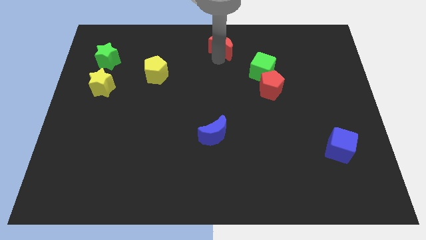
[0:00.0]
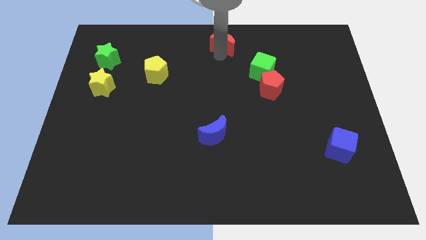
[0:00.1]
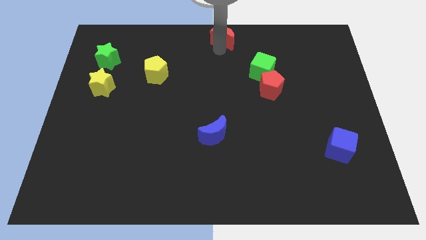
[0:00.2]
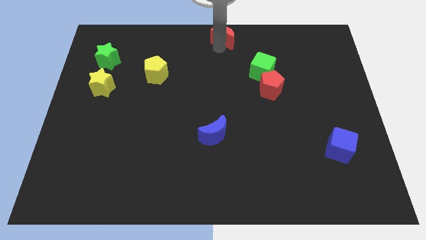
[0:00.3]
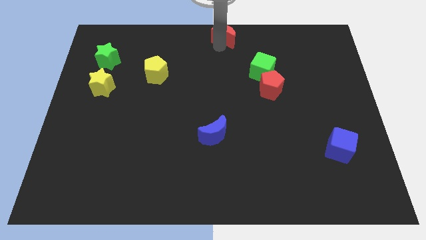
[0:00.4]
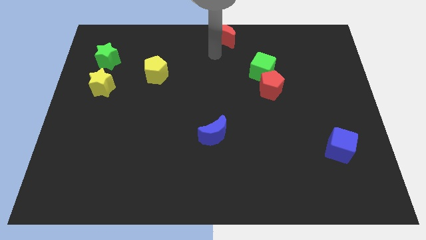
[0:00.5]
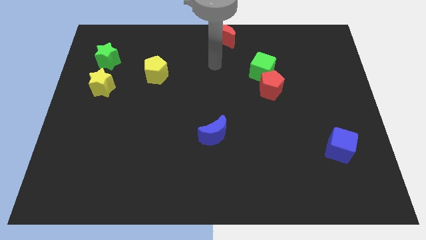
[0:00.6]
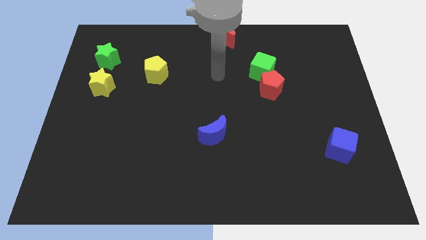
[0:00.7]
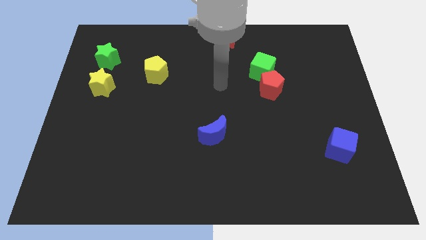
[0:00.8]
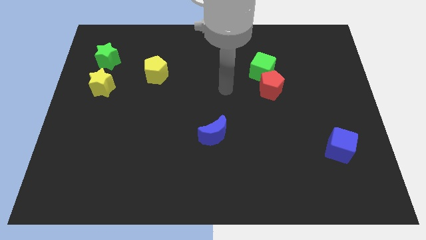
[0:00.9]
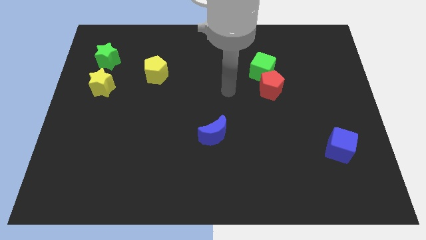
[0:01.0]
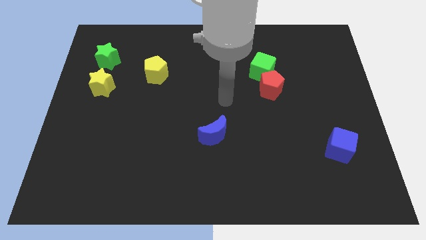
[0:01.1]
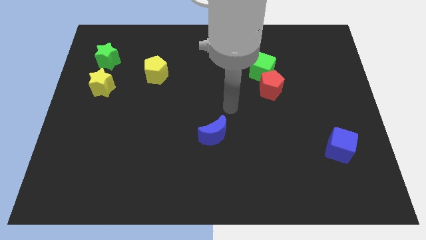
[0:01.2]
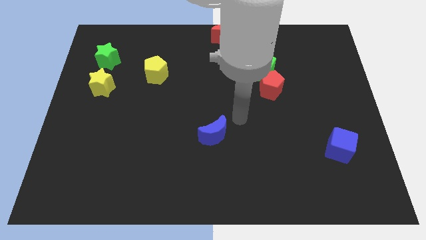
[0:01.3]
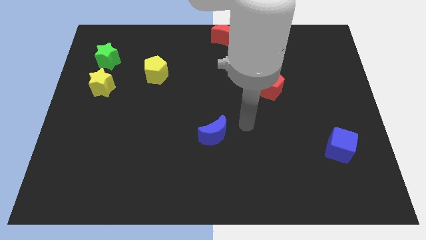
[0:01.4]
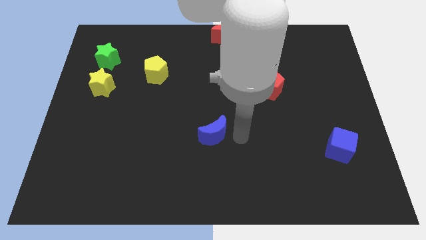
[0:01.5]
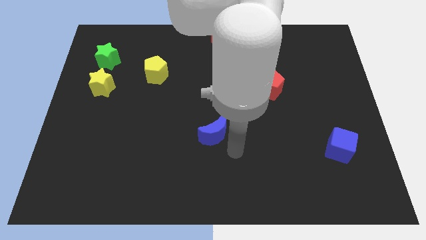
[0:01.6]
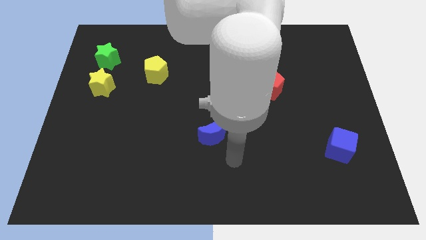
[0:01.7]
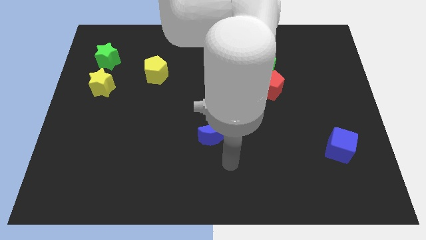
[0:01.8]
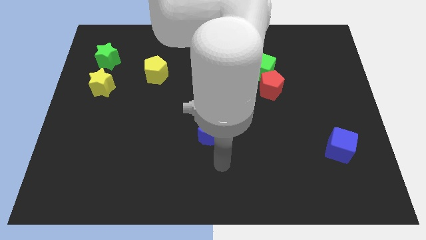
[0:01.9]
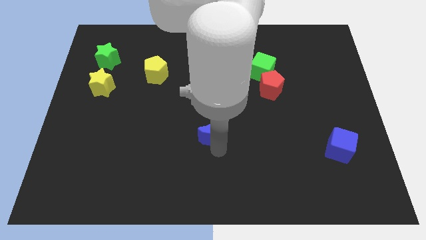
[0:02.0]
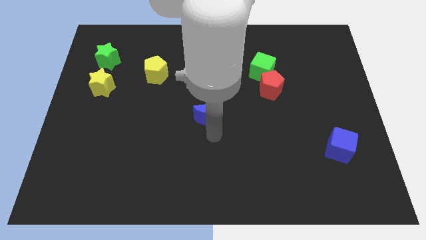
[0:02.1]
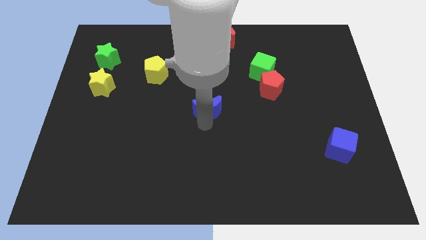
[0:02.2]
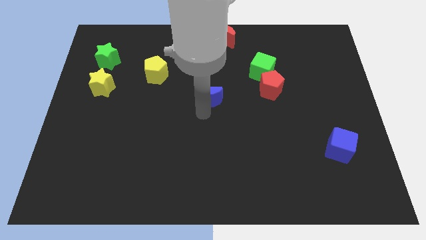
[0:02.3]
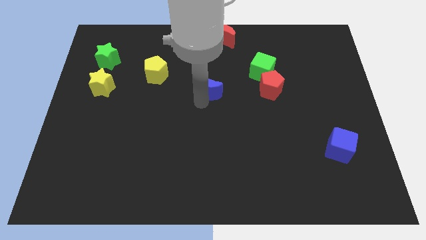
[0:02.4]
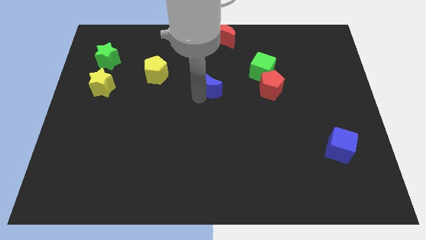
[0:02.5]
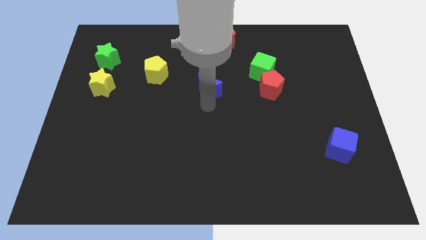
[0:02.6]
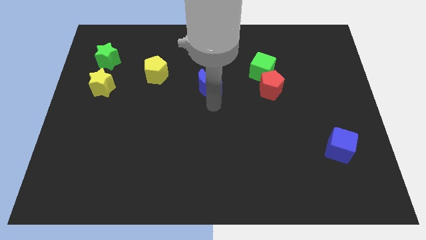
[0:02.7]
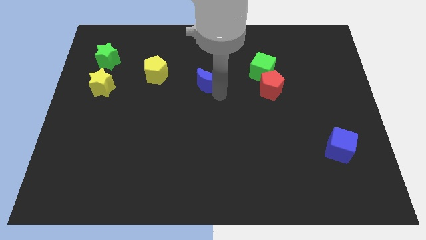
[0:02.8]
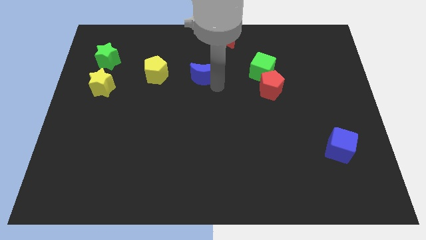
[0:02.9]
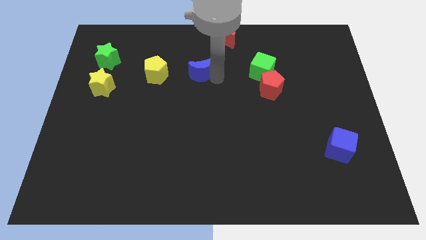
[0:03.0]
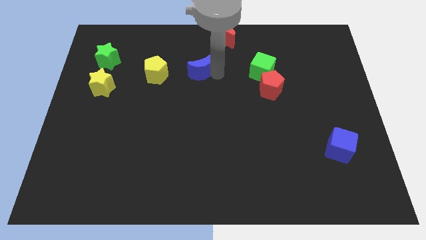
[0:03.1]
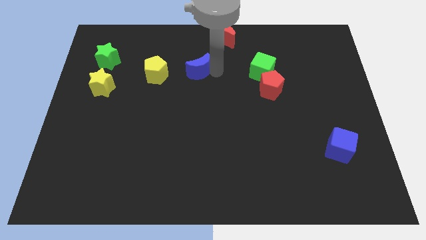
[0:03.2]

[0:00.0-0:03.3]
move the blue crescent parallel right to the yellow pentagon

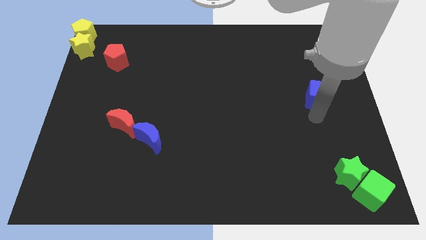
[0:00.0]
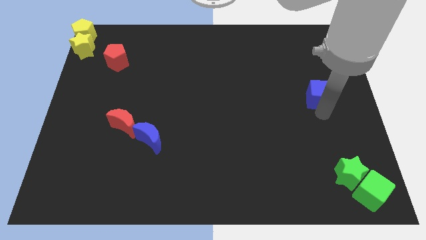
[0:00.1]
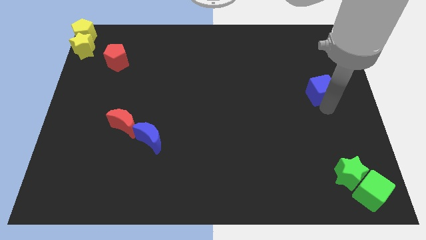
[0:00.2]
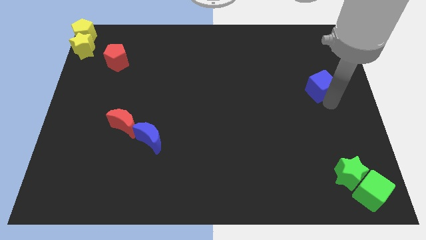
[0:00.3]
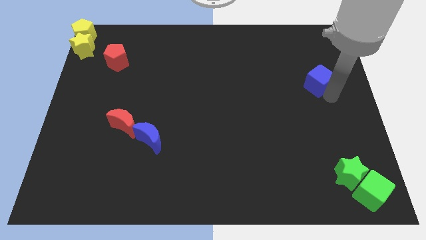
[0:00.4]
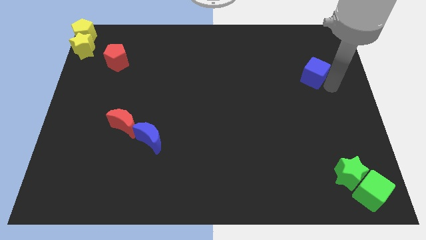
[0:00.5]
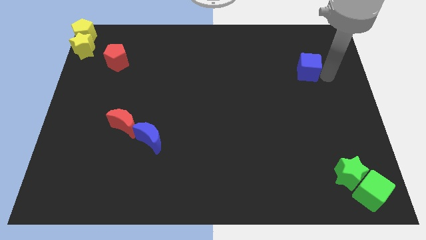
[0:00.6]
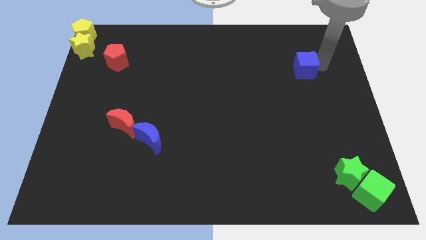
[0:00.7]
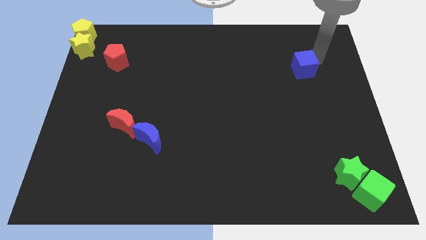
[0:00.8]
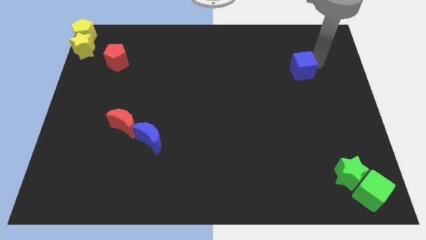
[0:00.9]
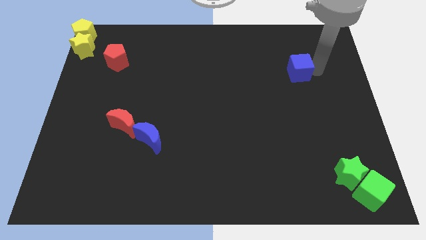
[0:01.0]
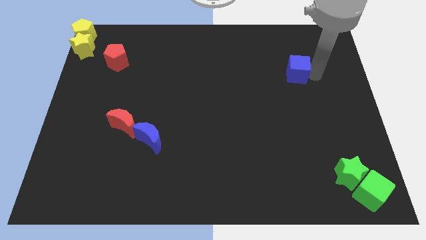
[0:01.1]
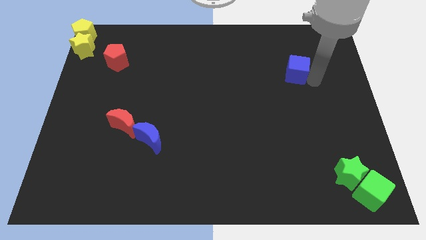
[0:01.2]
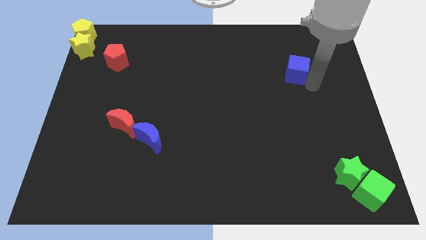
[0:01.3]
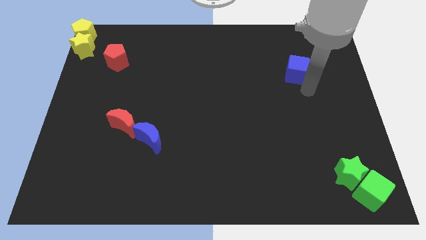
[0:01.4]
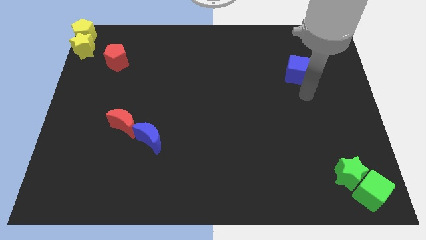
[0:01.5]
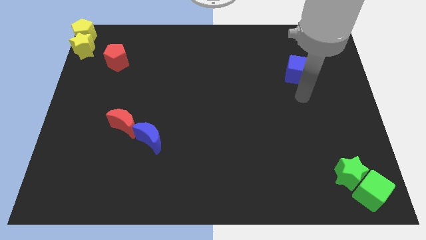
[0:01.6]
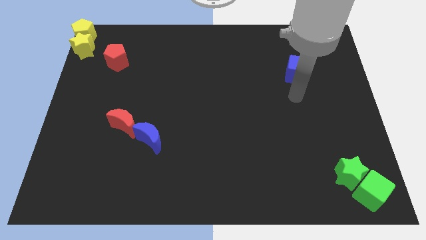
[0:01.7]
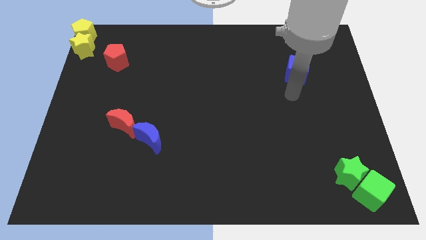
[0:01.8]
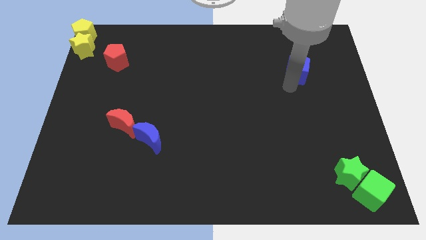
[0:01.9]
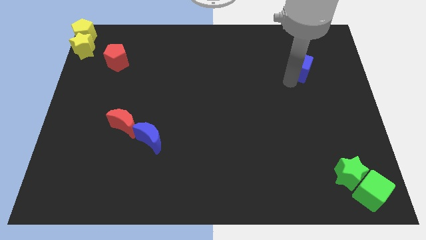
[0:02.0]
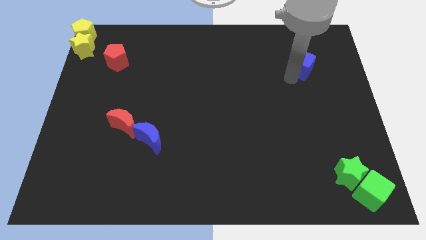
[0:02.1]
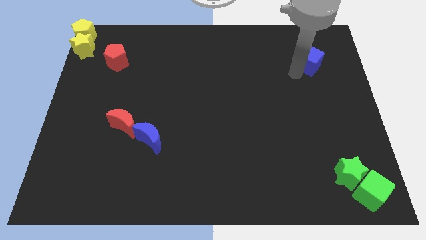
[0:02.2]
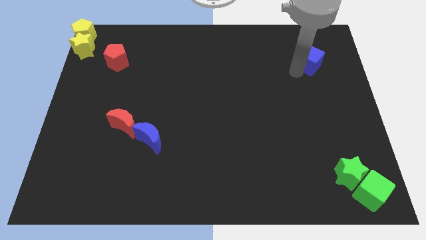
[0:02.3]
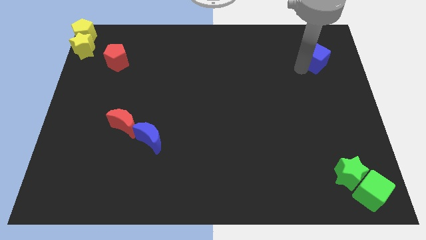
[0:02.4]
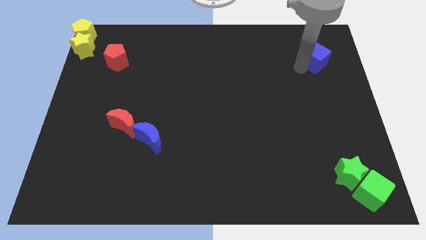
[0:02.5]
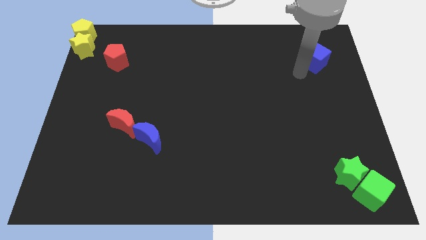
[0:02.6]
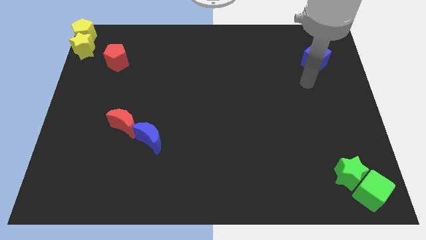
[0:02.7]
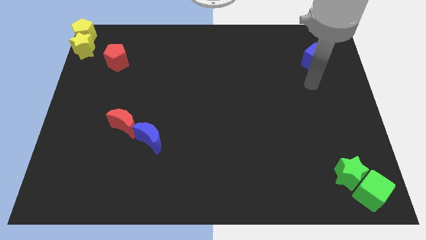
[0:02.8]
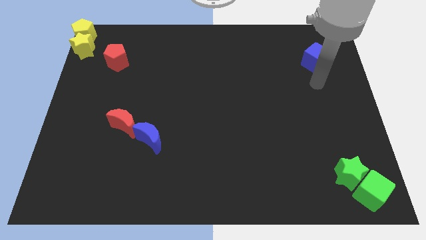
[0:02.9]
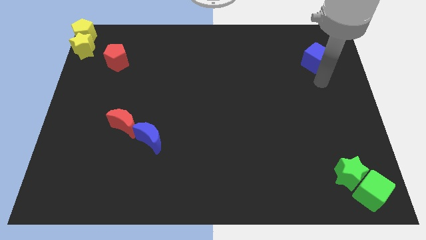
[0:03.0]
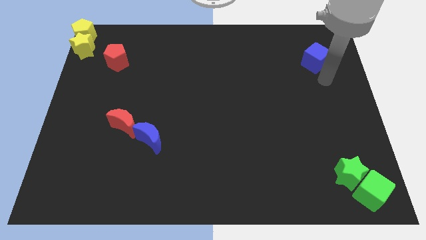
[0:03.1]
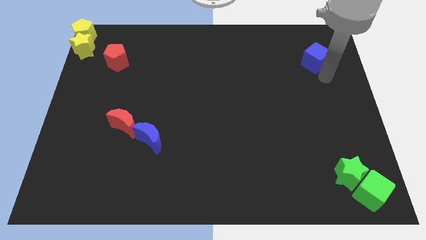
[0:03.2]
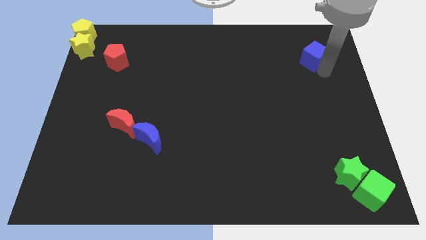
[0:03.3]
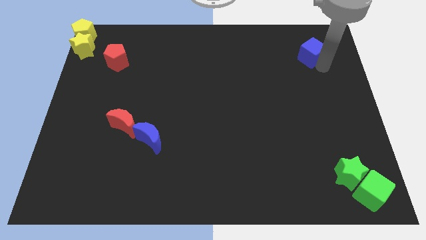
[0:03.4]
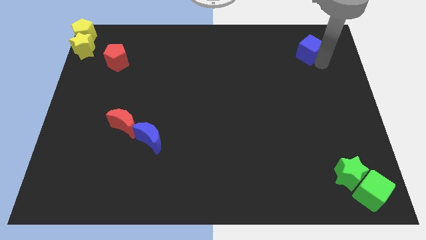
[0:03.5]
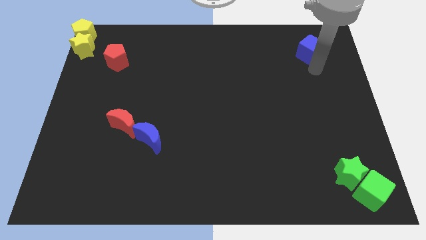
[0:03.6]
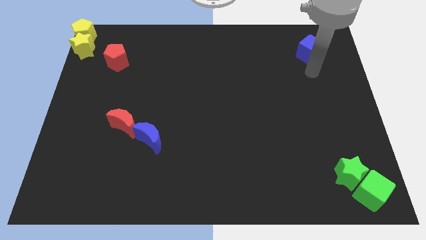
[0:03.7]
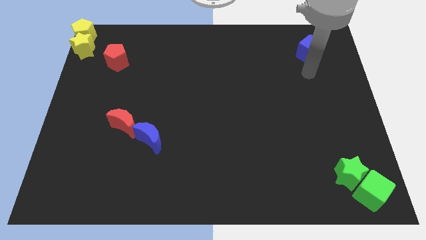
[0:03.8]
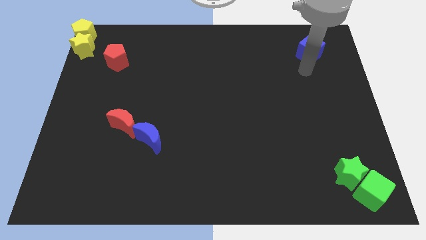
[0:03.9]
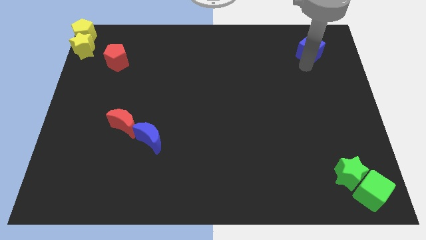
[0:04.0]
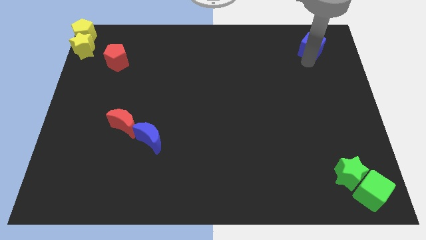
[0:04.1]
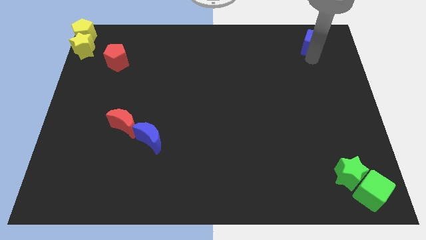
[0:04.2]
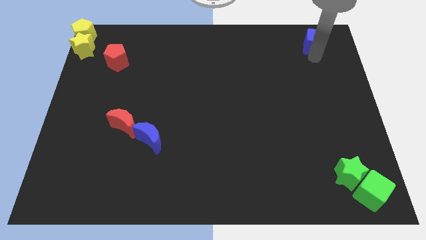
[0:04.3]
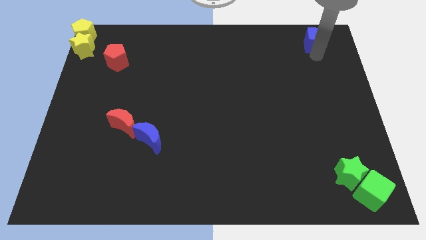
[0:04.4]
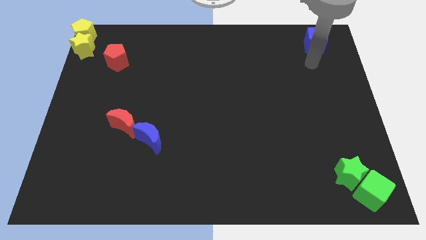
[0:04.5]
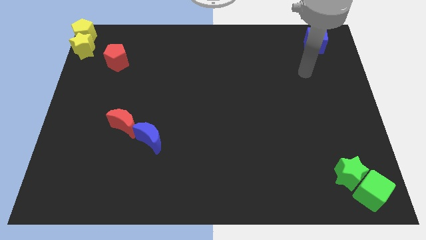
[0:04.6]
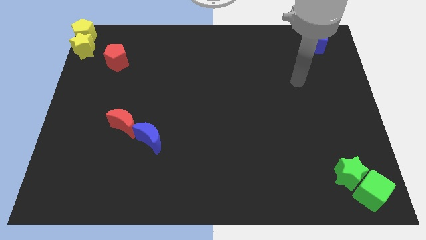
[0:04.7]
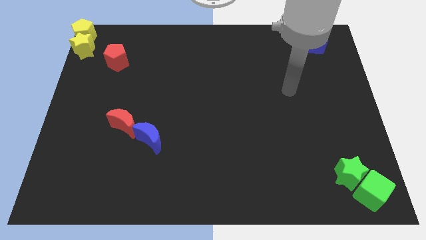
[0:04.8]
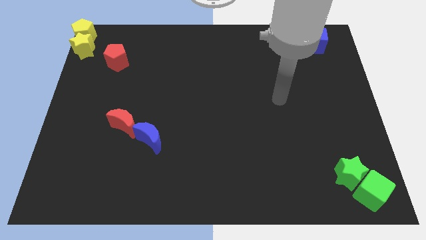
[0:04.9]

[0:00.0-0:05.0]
push the blue cube to the top right corner of the board

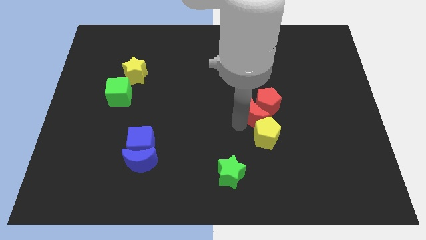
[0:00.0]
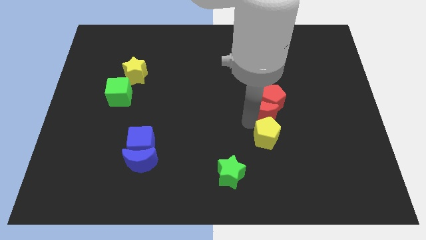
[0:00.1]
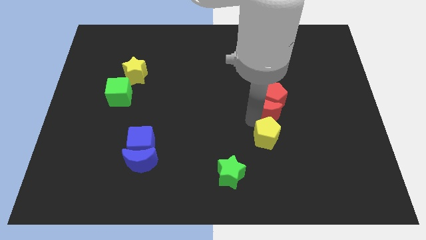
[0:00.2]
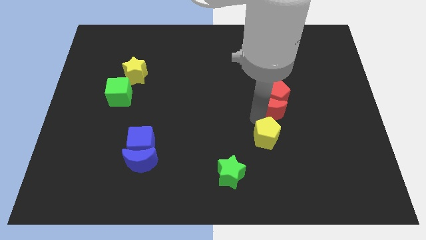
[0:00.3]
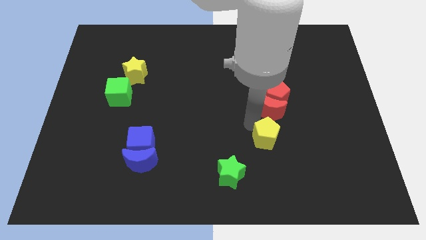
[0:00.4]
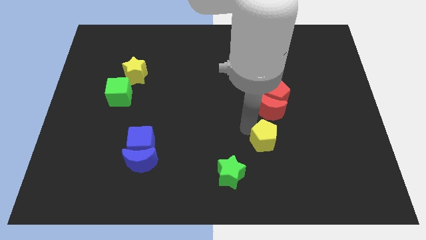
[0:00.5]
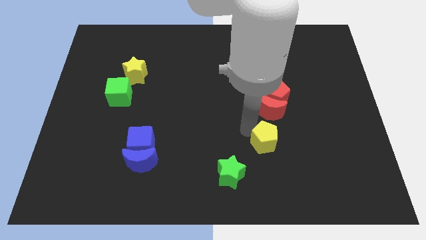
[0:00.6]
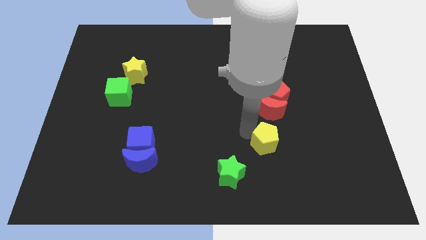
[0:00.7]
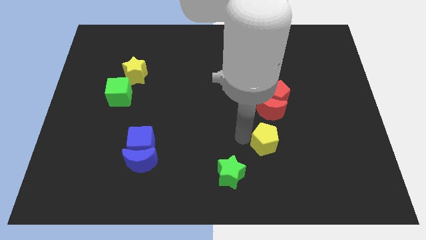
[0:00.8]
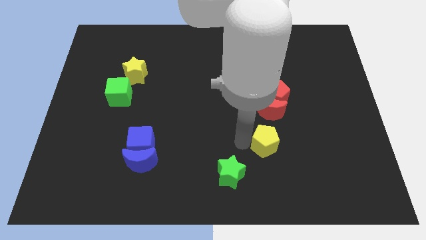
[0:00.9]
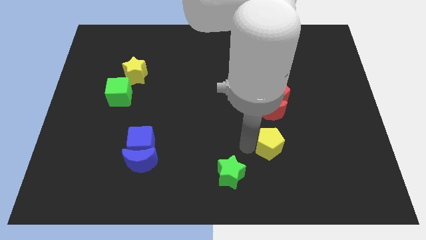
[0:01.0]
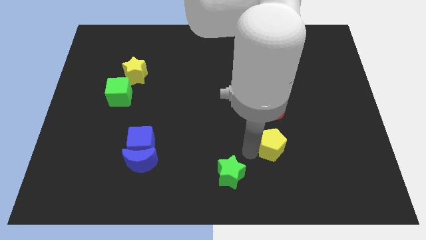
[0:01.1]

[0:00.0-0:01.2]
separate the red blocks and the yellow pentagon
